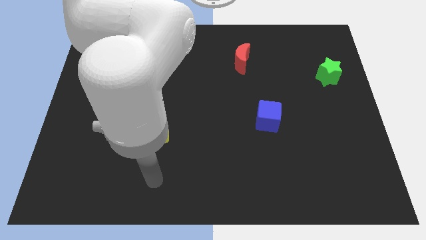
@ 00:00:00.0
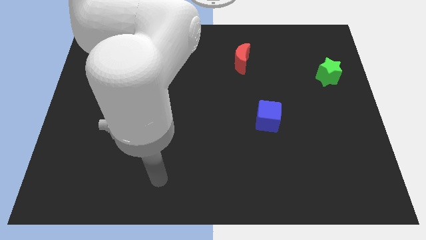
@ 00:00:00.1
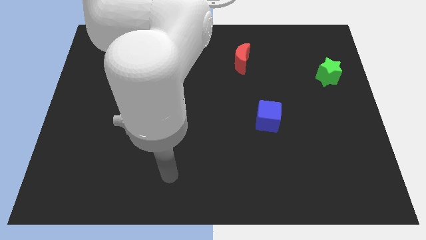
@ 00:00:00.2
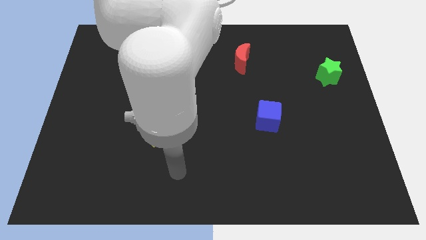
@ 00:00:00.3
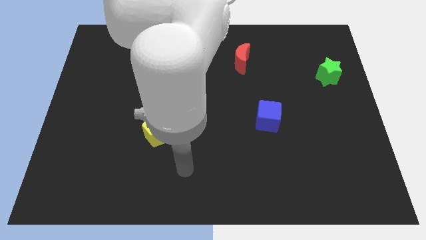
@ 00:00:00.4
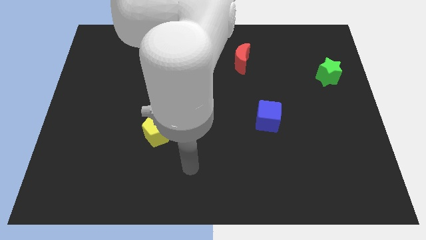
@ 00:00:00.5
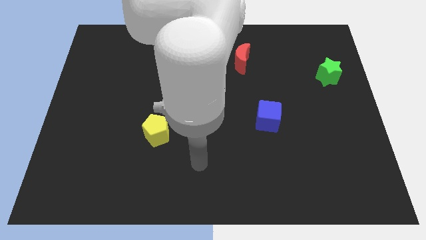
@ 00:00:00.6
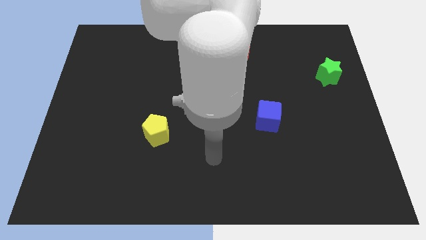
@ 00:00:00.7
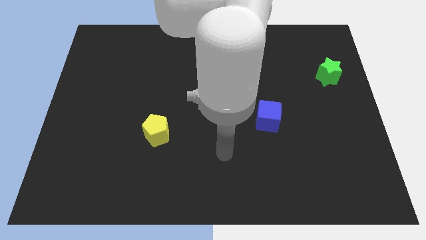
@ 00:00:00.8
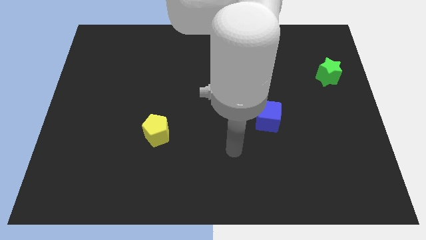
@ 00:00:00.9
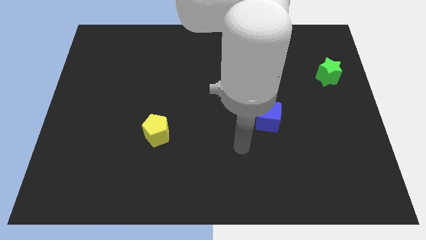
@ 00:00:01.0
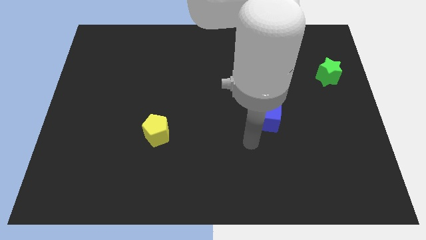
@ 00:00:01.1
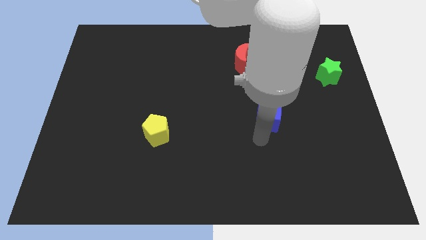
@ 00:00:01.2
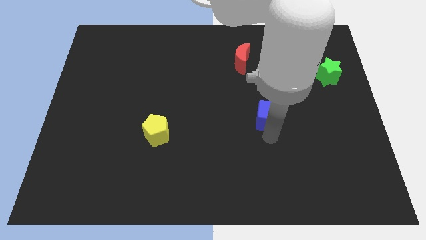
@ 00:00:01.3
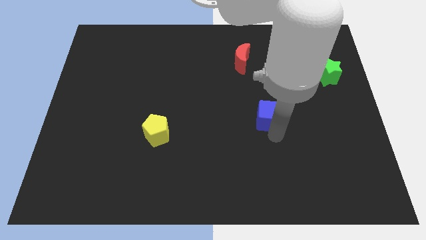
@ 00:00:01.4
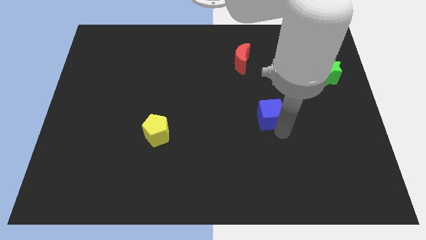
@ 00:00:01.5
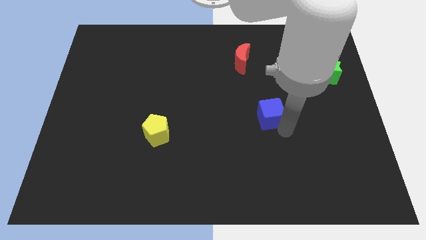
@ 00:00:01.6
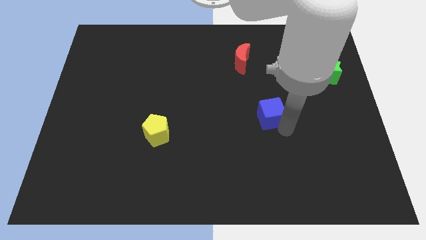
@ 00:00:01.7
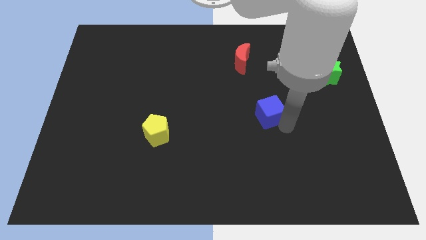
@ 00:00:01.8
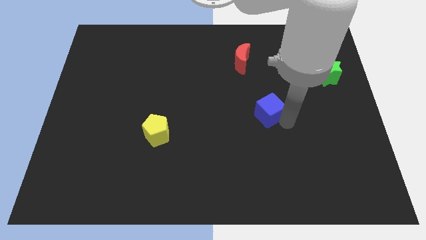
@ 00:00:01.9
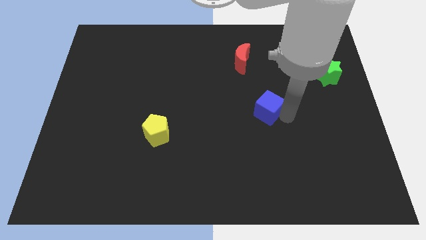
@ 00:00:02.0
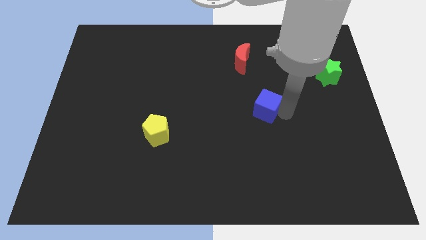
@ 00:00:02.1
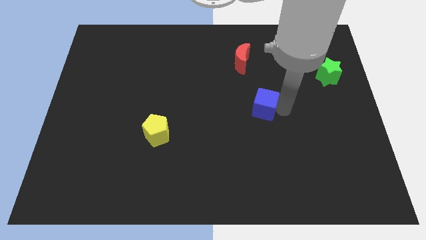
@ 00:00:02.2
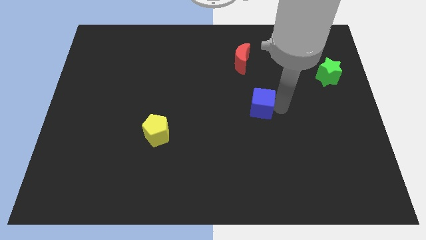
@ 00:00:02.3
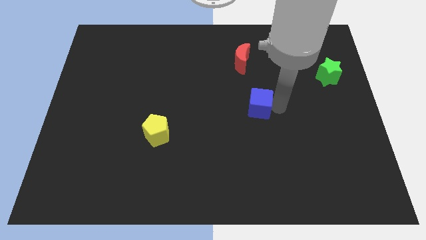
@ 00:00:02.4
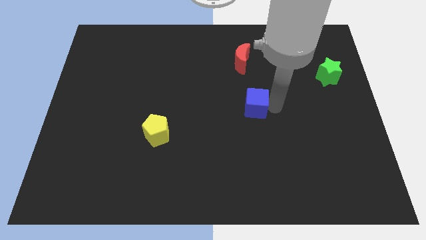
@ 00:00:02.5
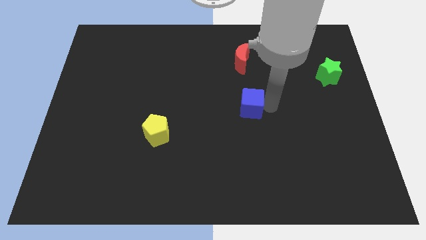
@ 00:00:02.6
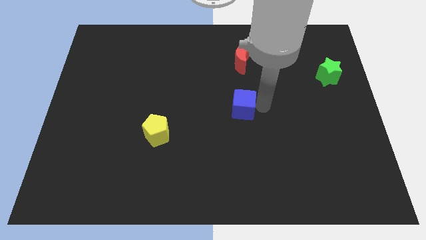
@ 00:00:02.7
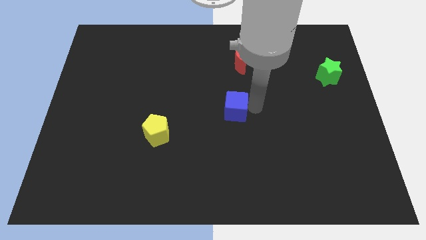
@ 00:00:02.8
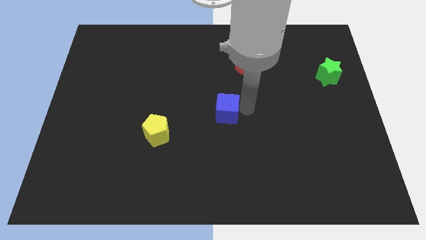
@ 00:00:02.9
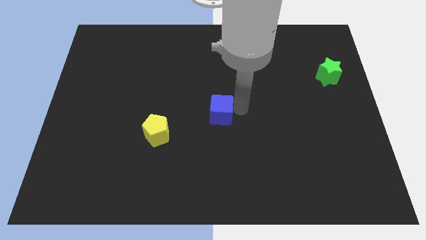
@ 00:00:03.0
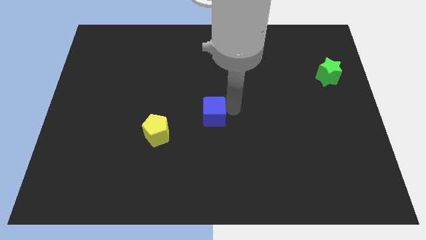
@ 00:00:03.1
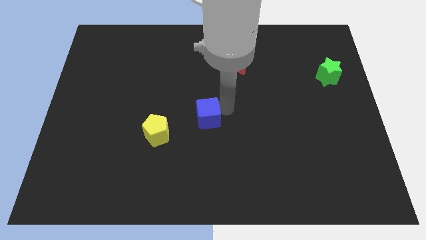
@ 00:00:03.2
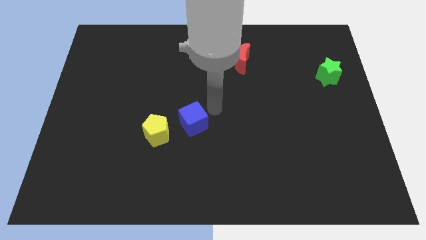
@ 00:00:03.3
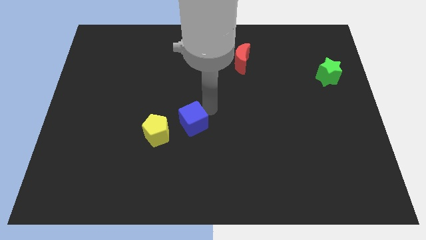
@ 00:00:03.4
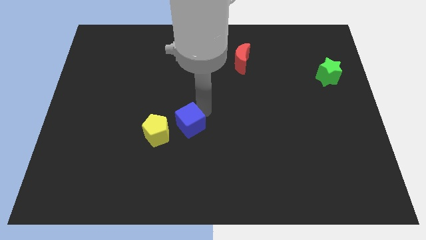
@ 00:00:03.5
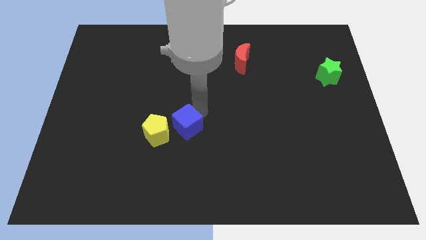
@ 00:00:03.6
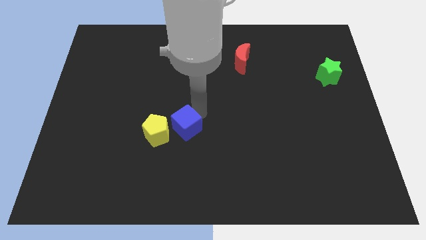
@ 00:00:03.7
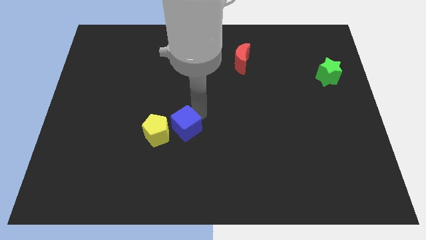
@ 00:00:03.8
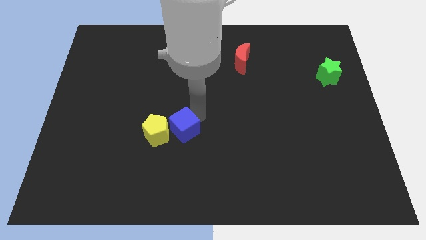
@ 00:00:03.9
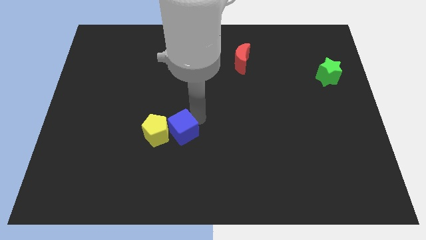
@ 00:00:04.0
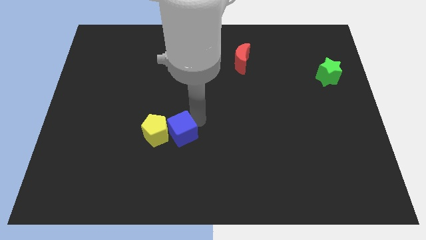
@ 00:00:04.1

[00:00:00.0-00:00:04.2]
slide the blue cube towards the pentagon

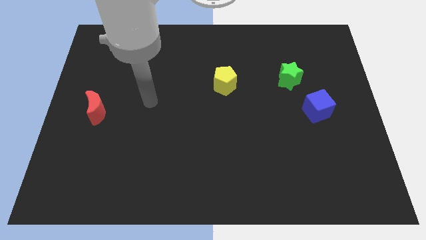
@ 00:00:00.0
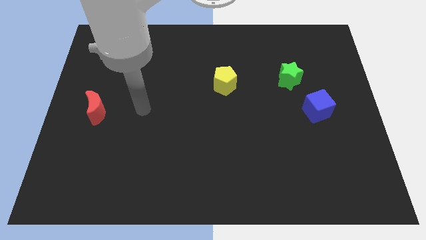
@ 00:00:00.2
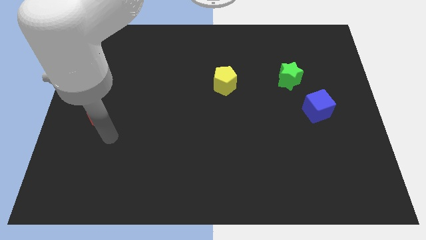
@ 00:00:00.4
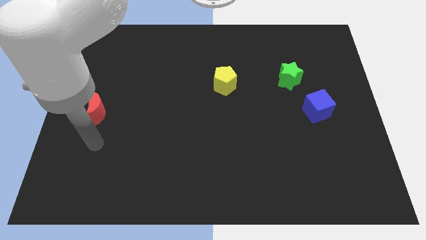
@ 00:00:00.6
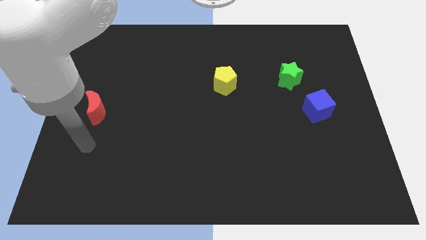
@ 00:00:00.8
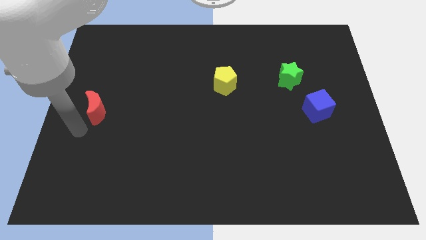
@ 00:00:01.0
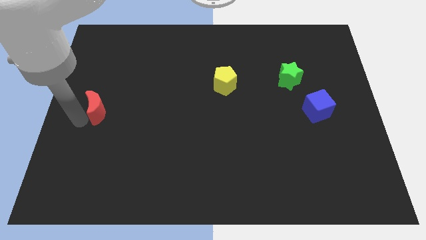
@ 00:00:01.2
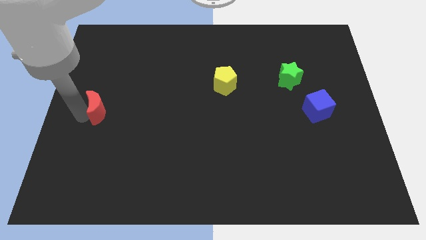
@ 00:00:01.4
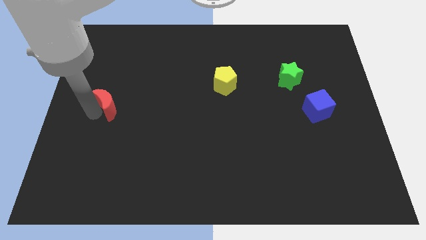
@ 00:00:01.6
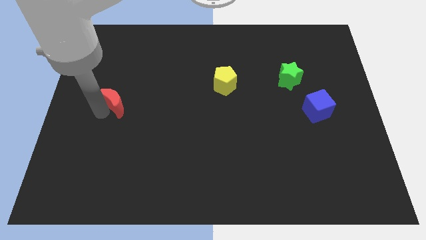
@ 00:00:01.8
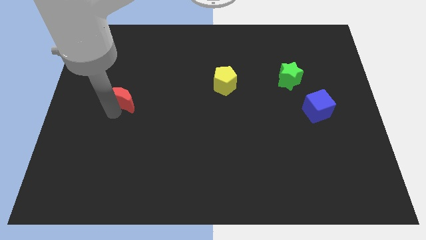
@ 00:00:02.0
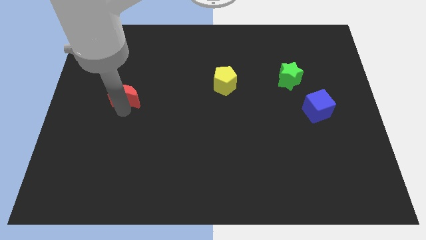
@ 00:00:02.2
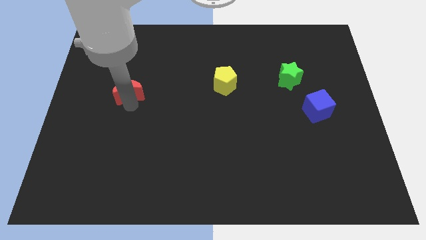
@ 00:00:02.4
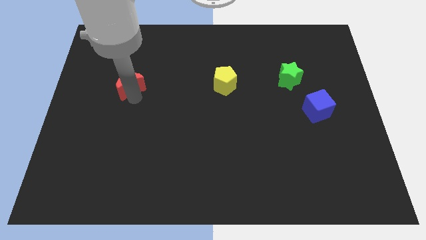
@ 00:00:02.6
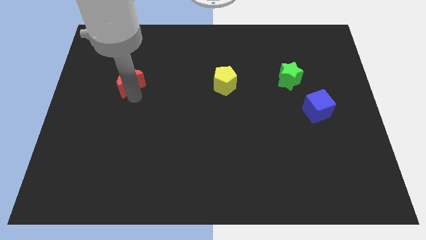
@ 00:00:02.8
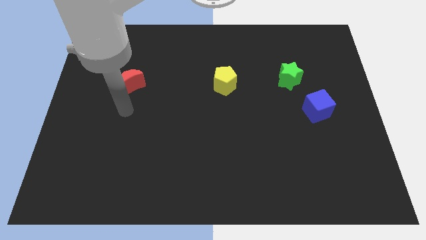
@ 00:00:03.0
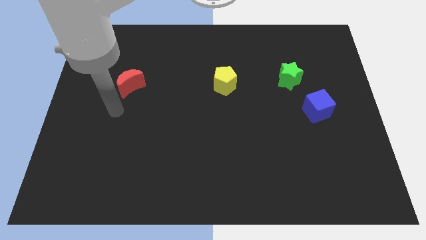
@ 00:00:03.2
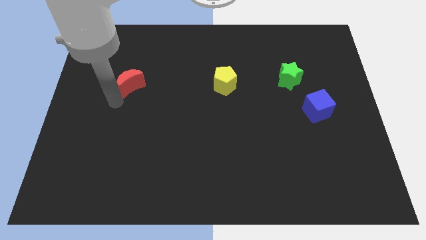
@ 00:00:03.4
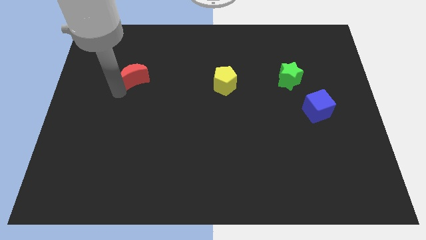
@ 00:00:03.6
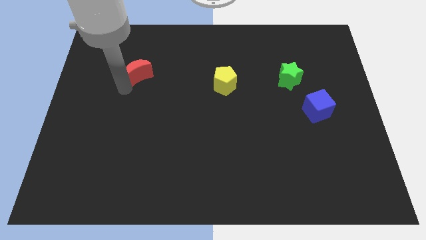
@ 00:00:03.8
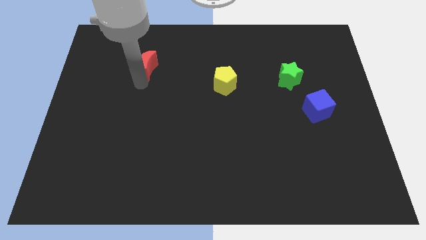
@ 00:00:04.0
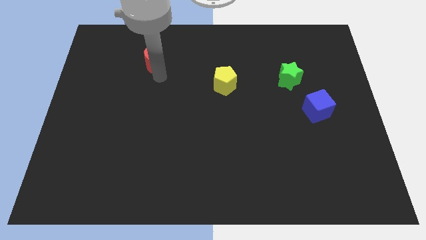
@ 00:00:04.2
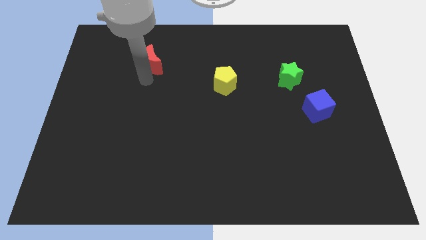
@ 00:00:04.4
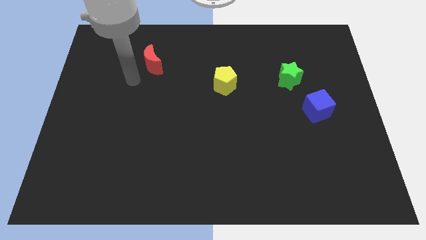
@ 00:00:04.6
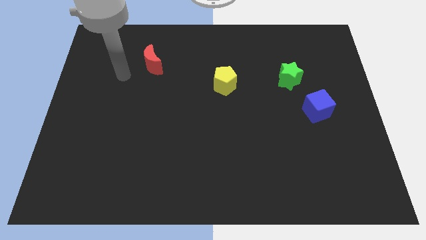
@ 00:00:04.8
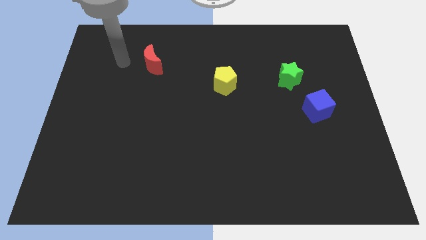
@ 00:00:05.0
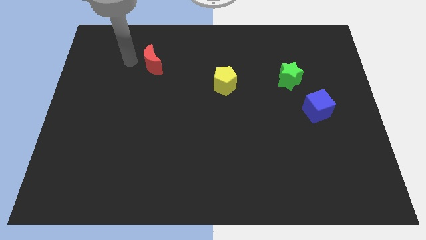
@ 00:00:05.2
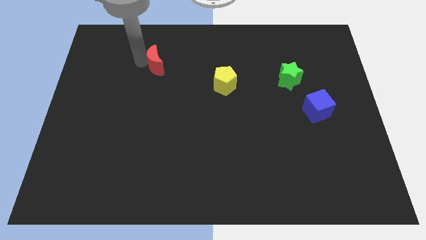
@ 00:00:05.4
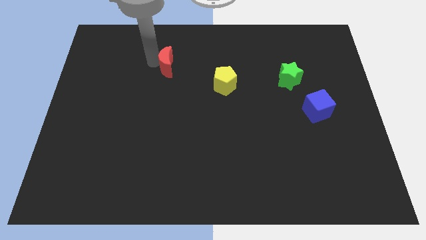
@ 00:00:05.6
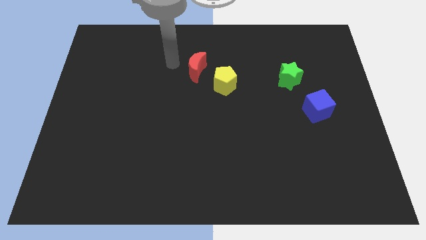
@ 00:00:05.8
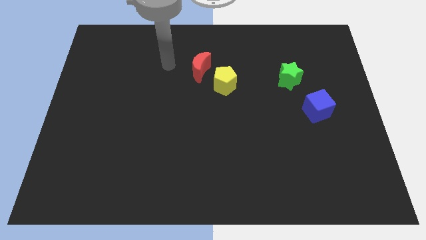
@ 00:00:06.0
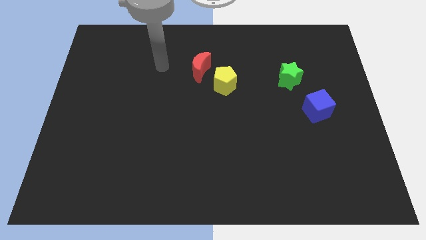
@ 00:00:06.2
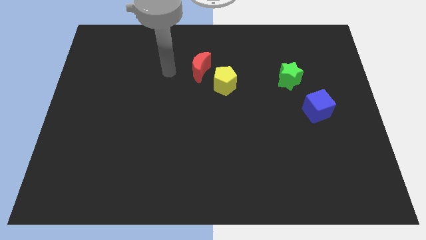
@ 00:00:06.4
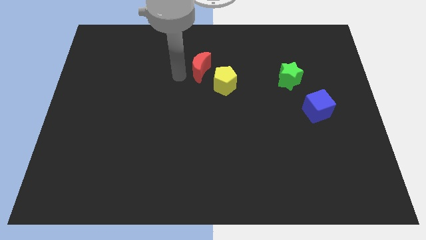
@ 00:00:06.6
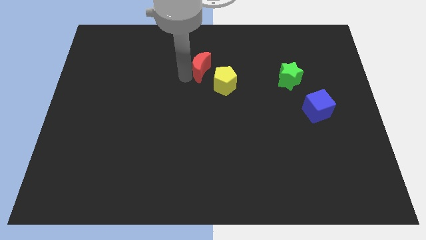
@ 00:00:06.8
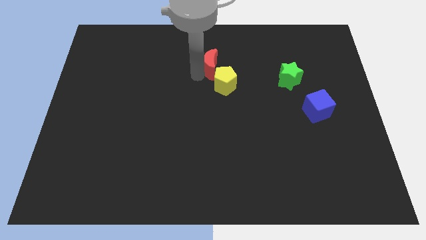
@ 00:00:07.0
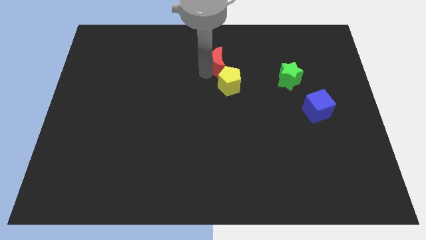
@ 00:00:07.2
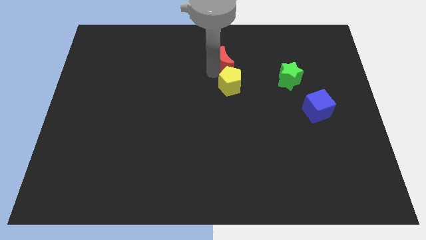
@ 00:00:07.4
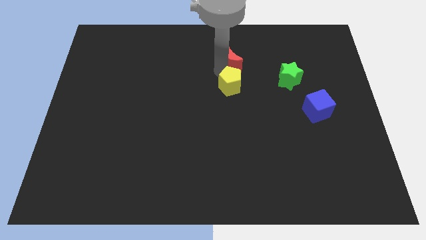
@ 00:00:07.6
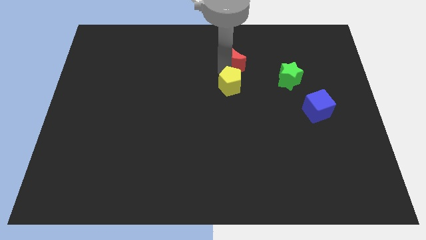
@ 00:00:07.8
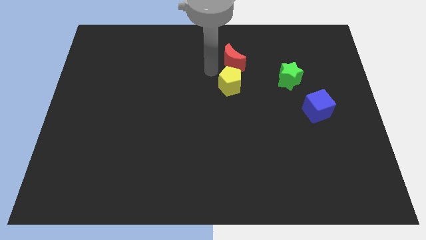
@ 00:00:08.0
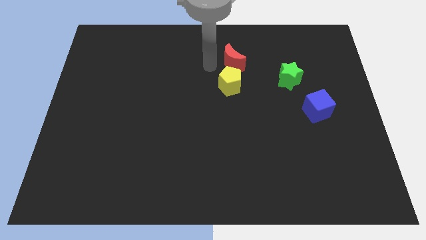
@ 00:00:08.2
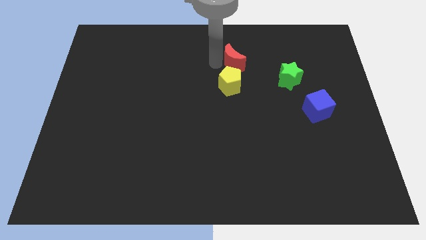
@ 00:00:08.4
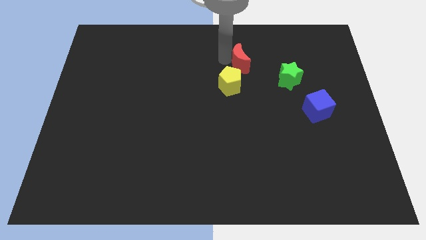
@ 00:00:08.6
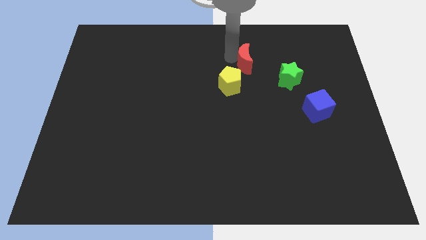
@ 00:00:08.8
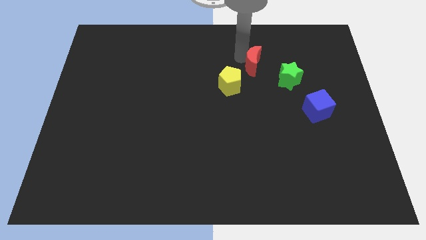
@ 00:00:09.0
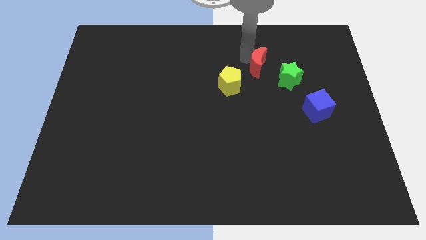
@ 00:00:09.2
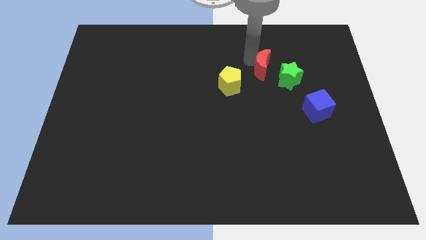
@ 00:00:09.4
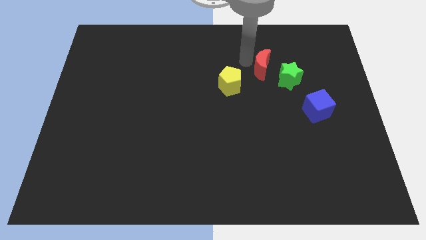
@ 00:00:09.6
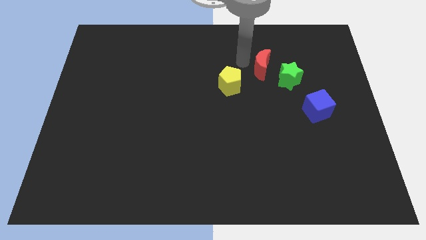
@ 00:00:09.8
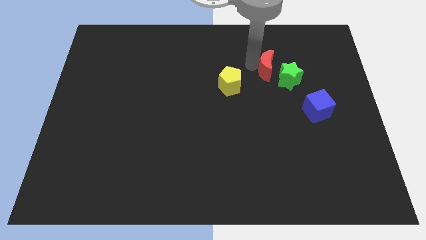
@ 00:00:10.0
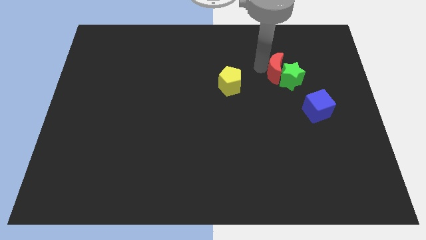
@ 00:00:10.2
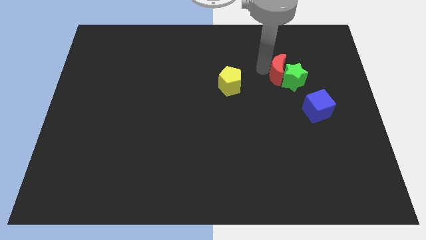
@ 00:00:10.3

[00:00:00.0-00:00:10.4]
move the moon next to the green star
